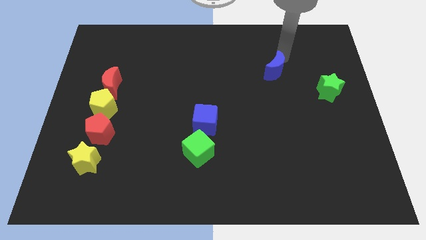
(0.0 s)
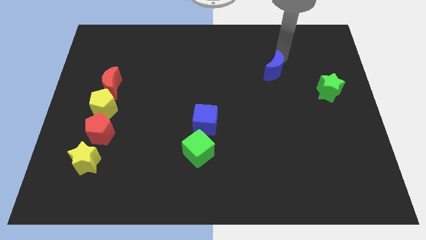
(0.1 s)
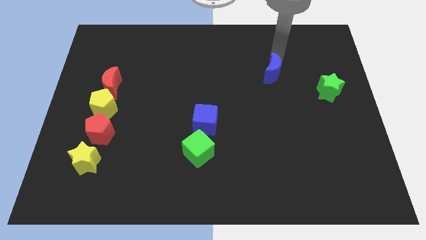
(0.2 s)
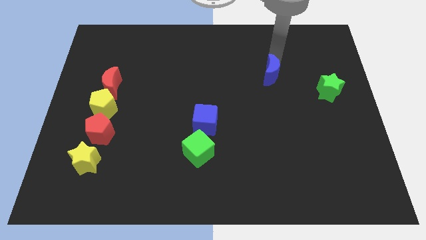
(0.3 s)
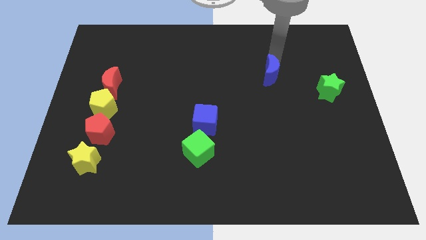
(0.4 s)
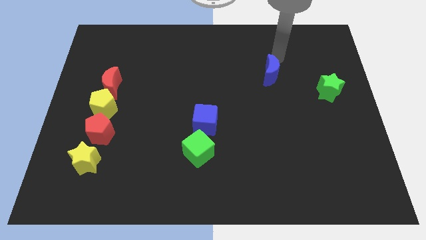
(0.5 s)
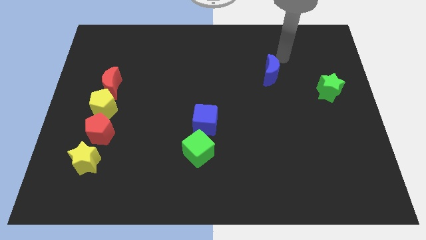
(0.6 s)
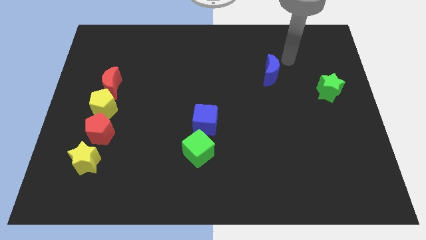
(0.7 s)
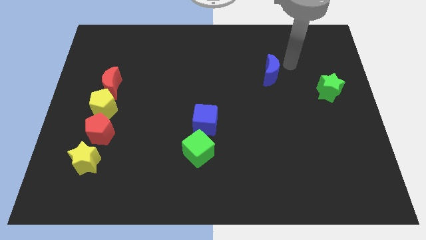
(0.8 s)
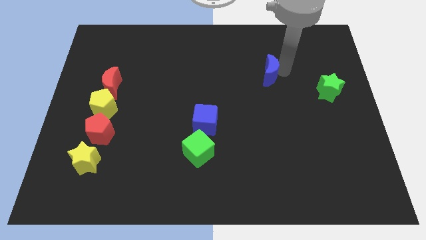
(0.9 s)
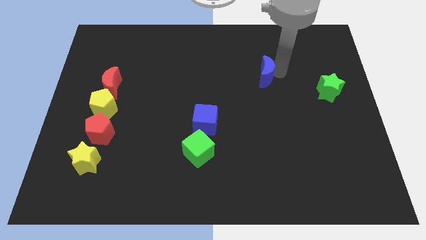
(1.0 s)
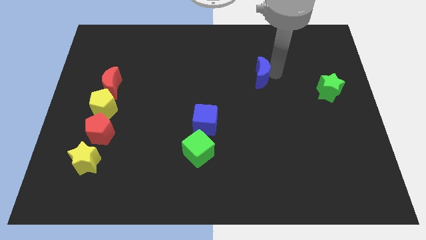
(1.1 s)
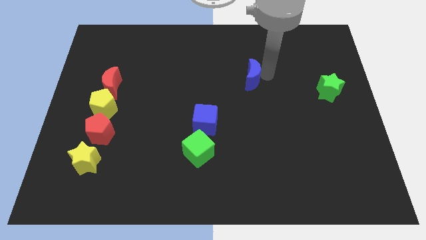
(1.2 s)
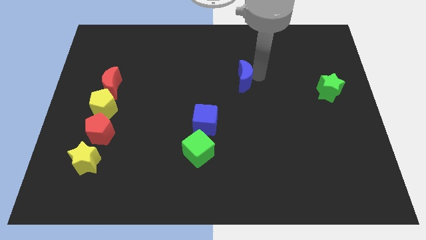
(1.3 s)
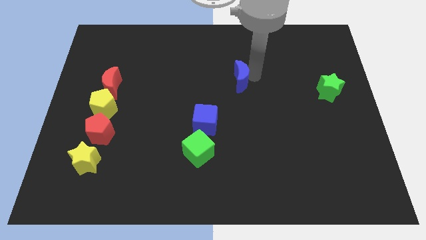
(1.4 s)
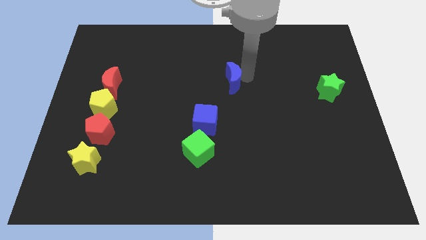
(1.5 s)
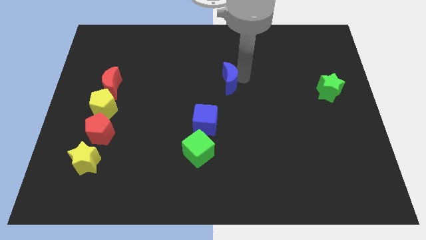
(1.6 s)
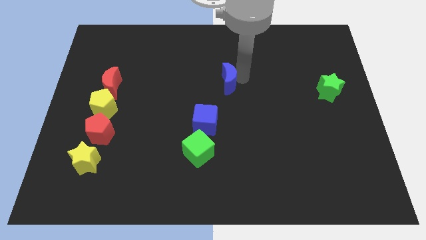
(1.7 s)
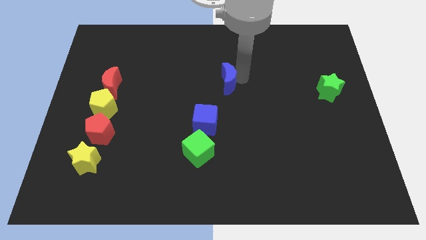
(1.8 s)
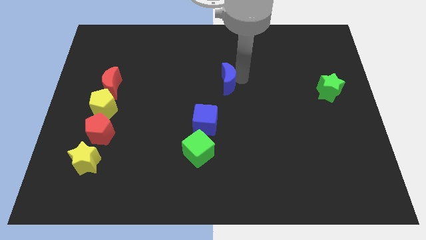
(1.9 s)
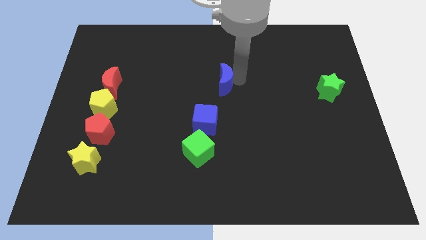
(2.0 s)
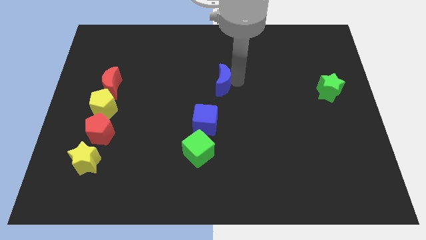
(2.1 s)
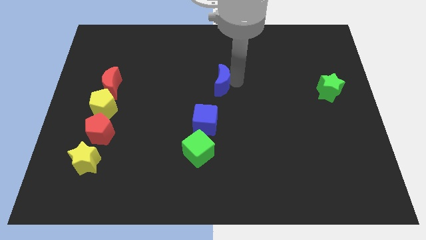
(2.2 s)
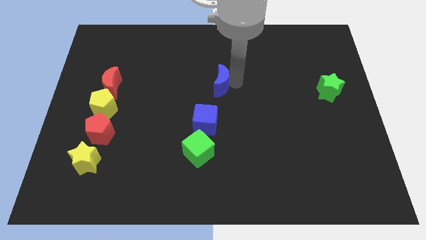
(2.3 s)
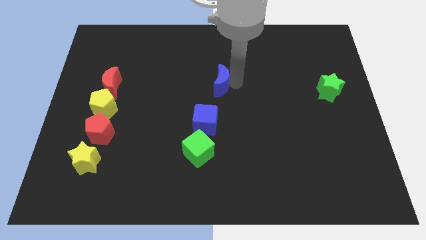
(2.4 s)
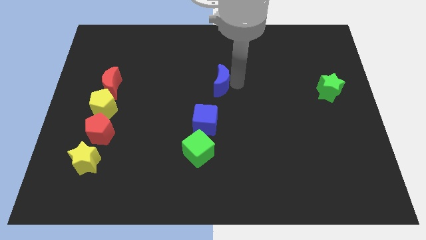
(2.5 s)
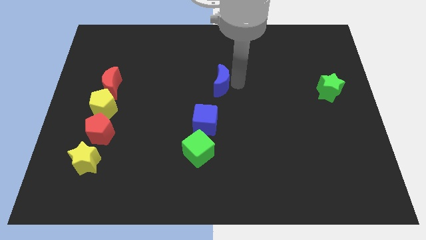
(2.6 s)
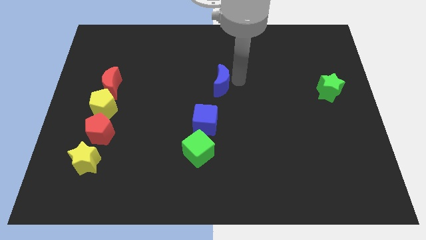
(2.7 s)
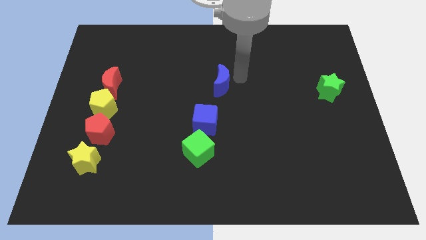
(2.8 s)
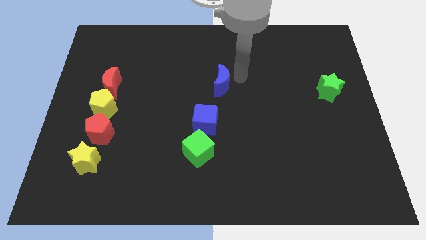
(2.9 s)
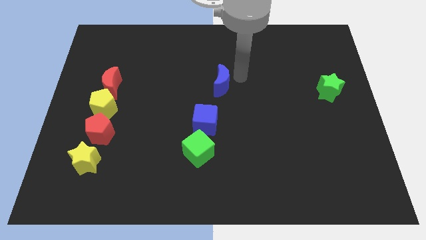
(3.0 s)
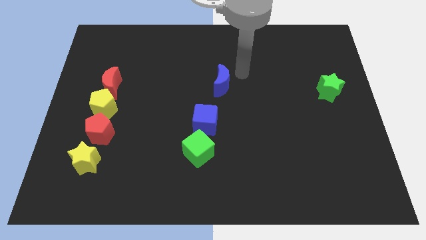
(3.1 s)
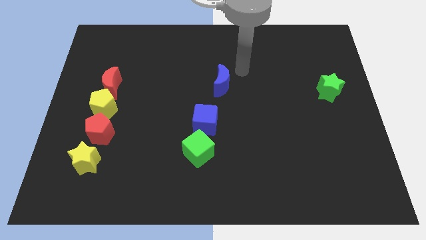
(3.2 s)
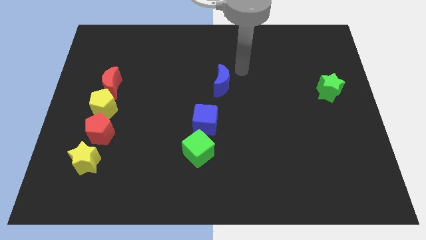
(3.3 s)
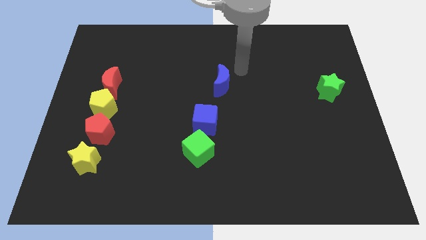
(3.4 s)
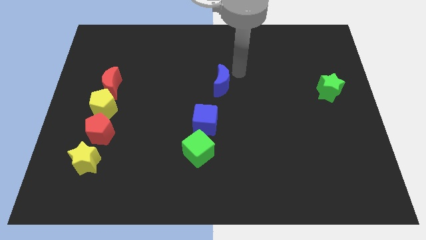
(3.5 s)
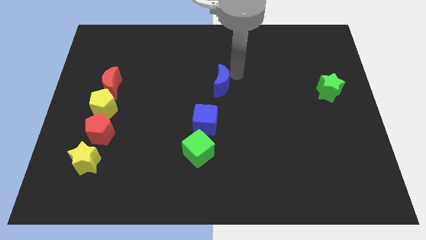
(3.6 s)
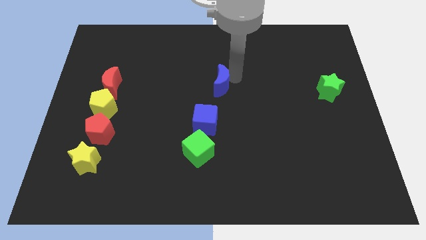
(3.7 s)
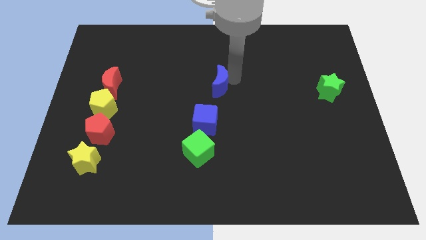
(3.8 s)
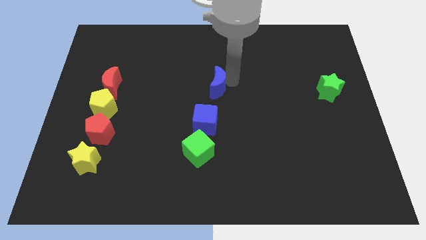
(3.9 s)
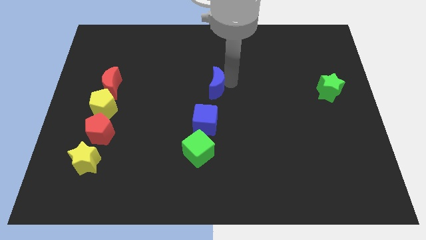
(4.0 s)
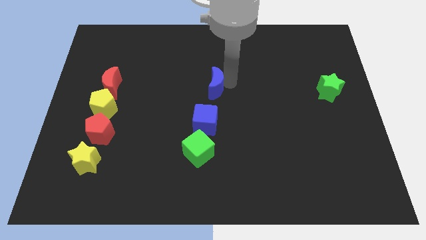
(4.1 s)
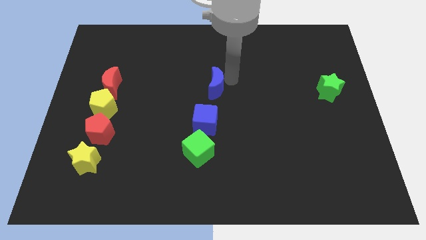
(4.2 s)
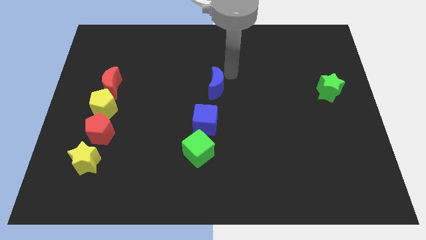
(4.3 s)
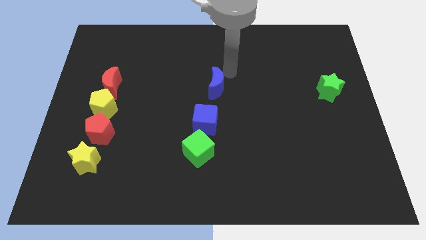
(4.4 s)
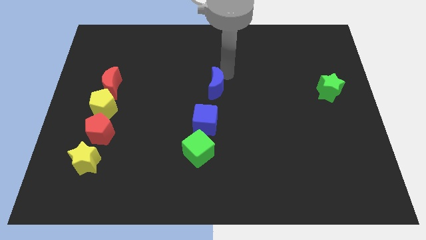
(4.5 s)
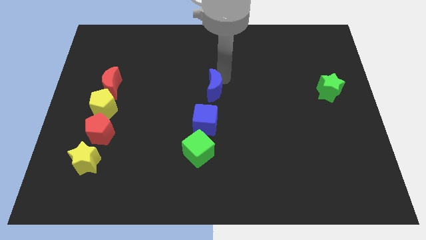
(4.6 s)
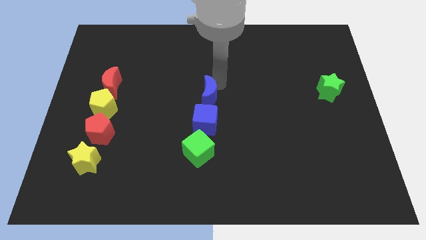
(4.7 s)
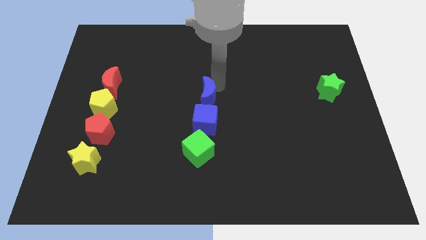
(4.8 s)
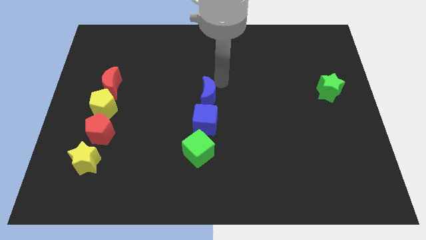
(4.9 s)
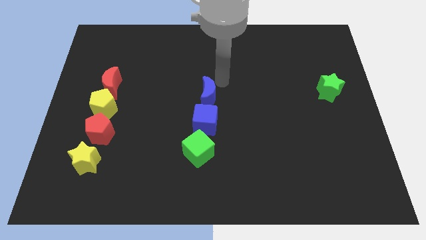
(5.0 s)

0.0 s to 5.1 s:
move the blue crescent above the blue cube

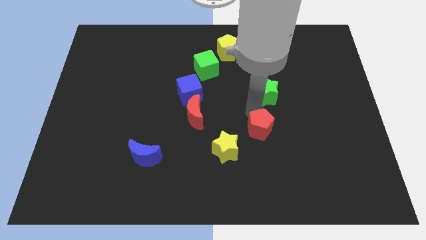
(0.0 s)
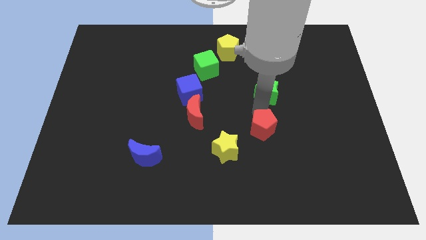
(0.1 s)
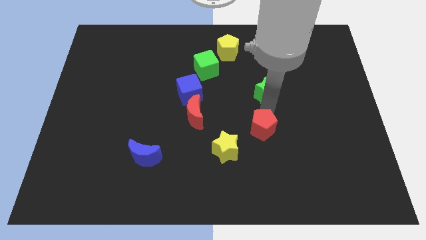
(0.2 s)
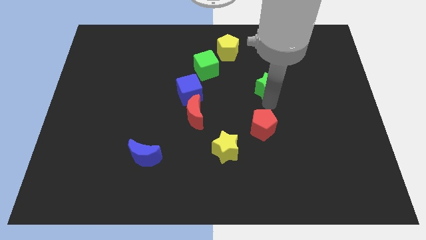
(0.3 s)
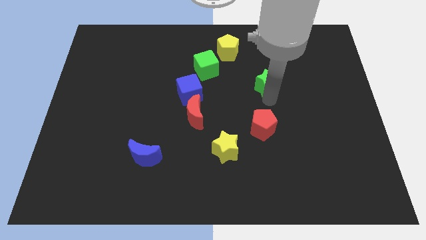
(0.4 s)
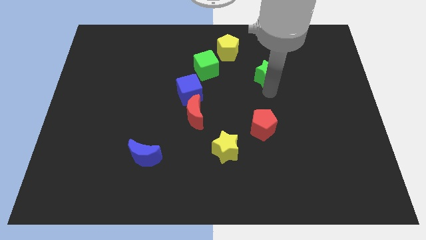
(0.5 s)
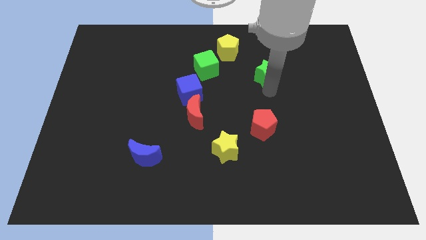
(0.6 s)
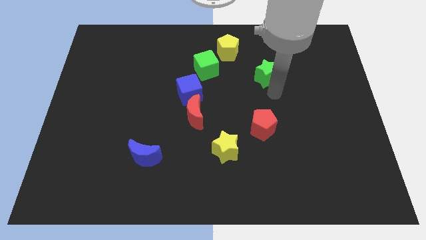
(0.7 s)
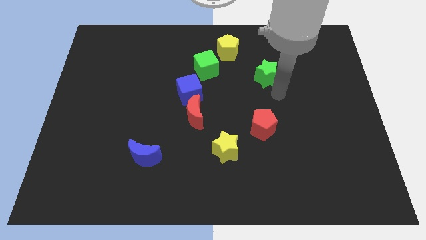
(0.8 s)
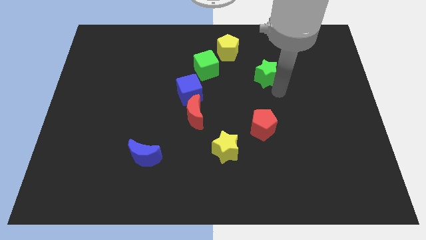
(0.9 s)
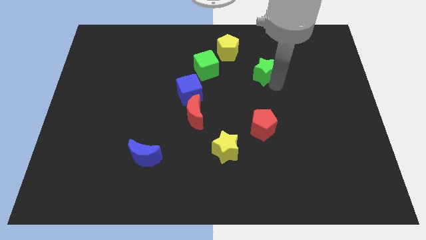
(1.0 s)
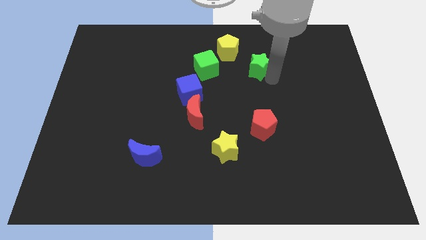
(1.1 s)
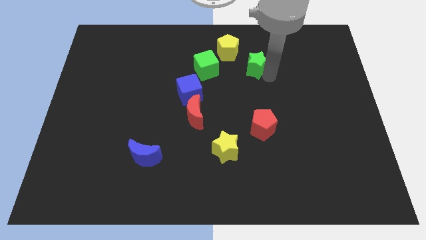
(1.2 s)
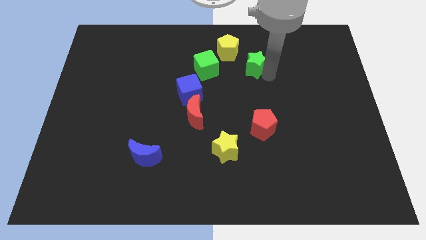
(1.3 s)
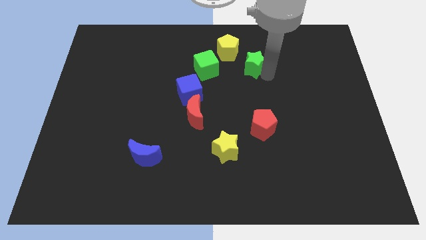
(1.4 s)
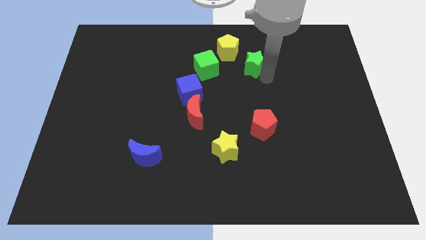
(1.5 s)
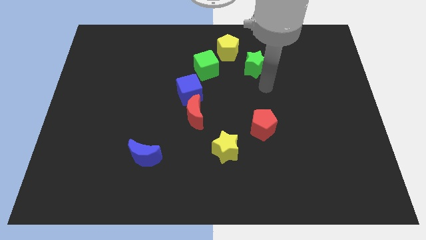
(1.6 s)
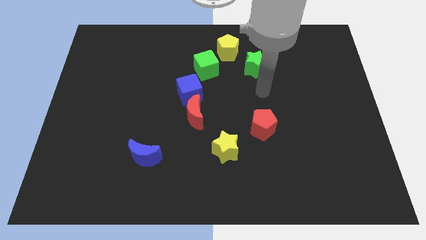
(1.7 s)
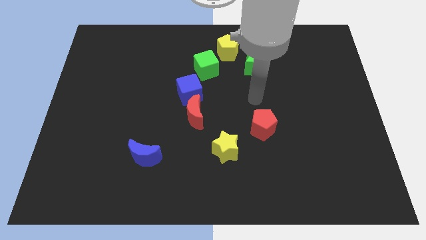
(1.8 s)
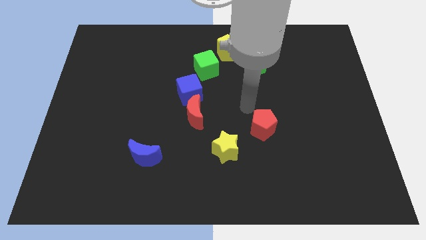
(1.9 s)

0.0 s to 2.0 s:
move green star slightly towards up

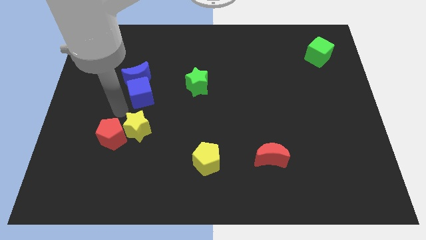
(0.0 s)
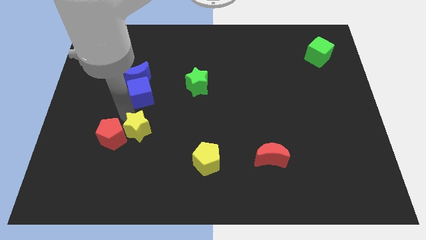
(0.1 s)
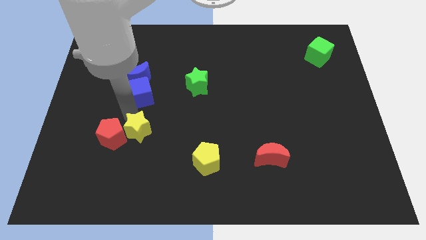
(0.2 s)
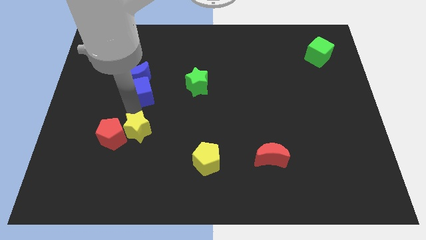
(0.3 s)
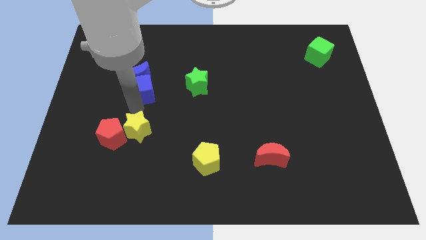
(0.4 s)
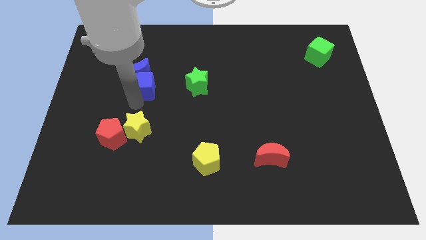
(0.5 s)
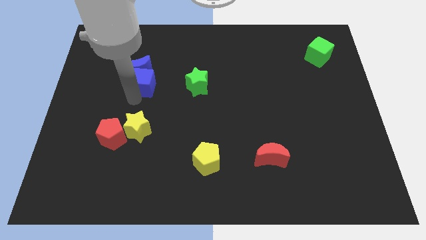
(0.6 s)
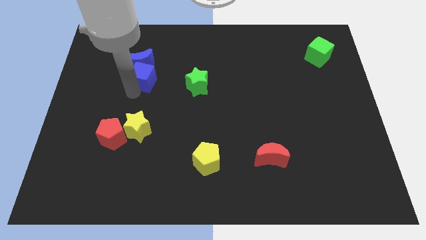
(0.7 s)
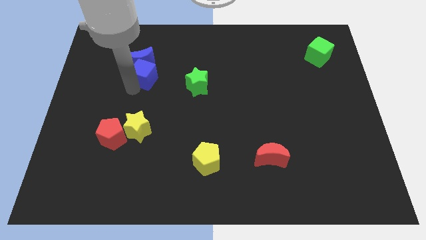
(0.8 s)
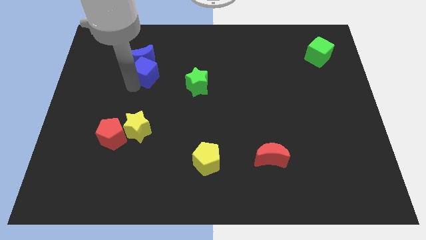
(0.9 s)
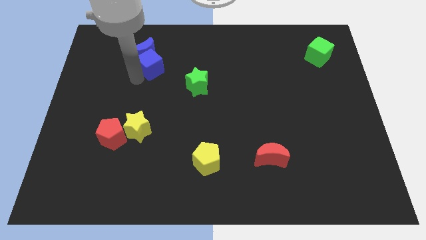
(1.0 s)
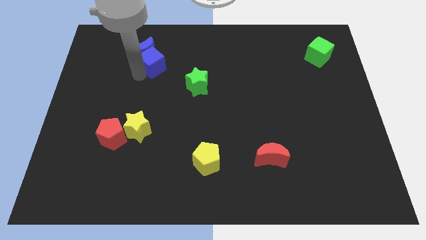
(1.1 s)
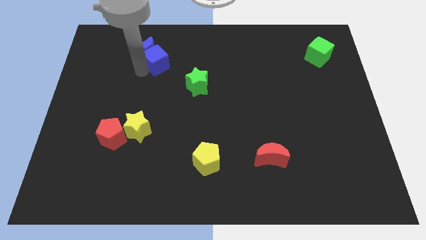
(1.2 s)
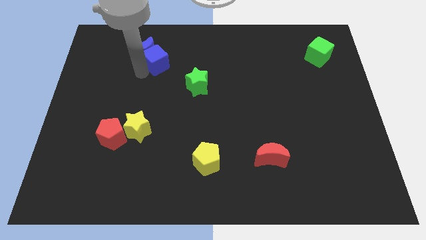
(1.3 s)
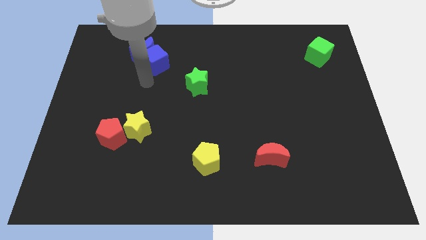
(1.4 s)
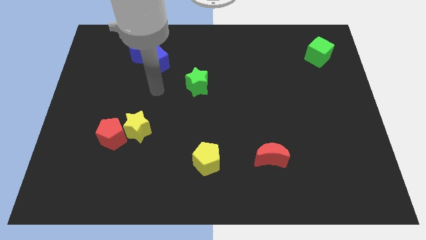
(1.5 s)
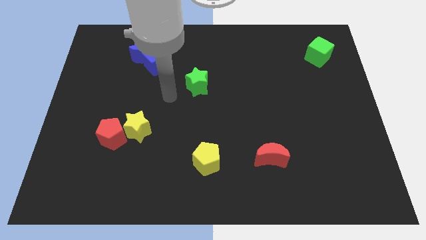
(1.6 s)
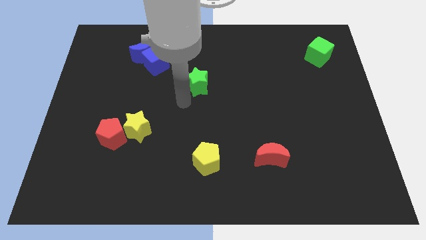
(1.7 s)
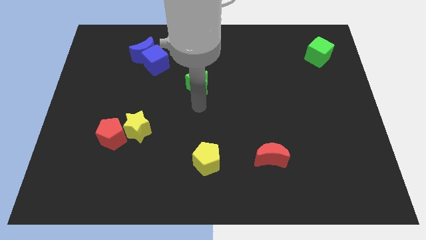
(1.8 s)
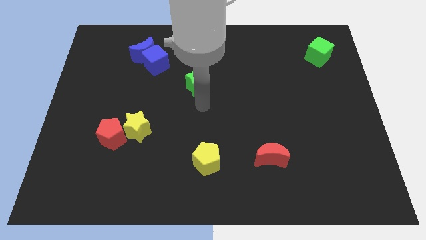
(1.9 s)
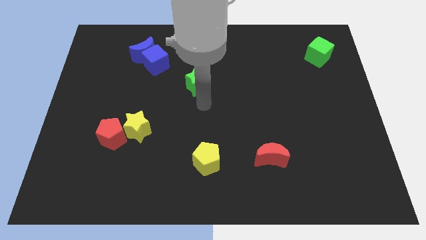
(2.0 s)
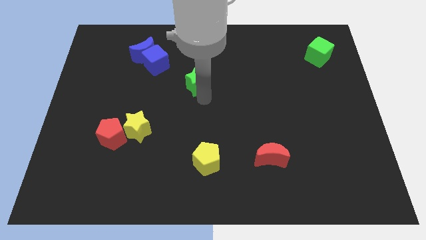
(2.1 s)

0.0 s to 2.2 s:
move the blue moon upwards with the blue cube
